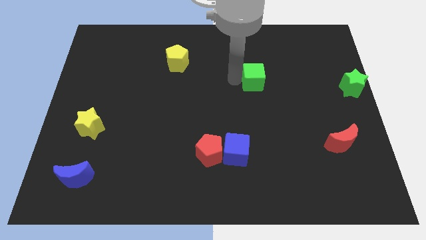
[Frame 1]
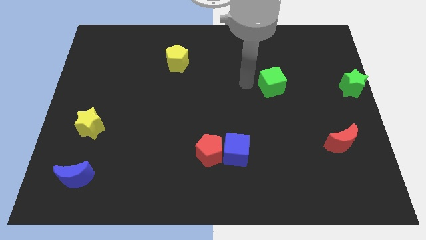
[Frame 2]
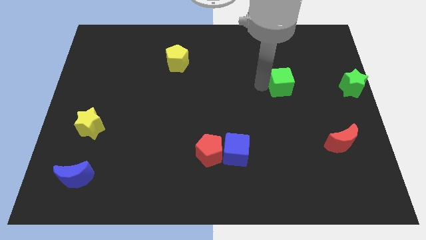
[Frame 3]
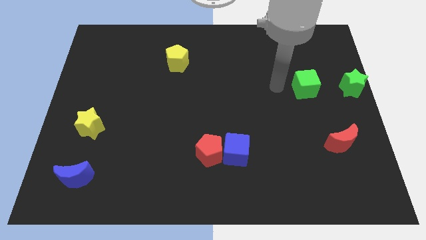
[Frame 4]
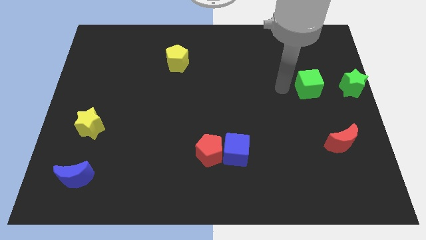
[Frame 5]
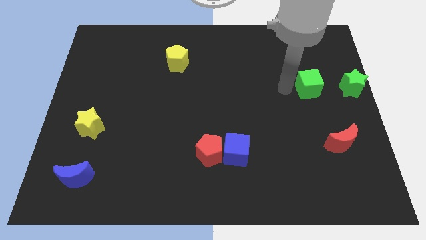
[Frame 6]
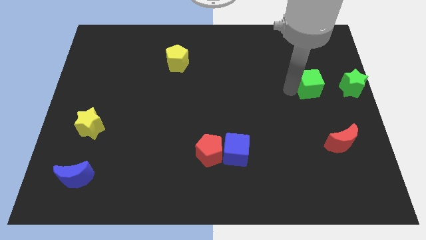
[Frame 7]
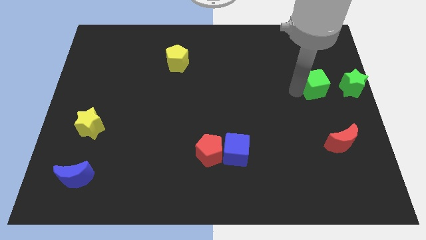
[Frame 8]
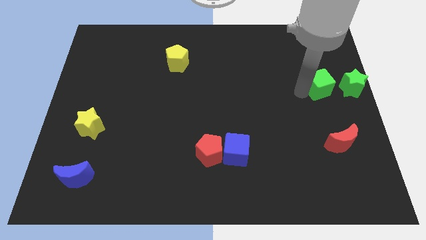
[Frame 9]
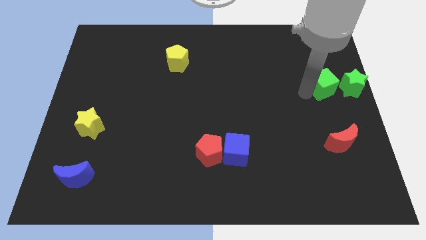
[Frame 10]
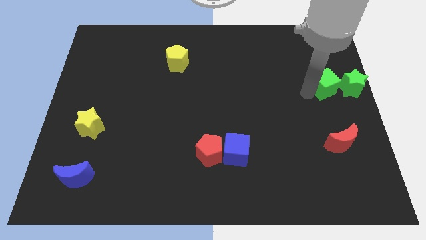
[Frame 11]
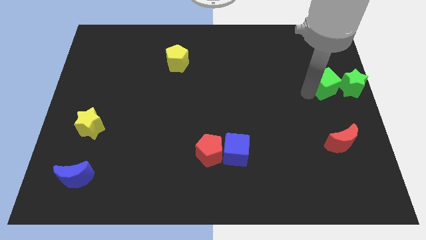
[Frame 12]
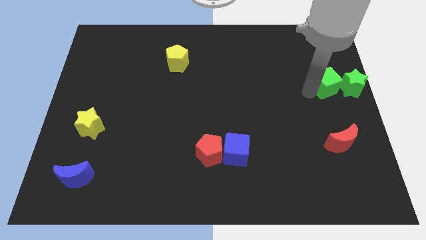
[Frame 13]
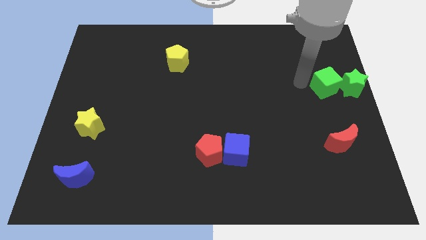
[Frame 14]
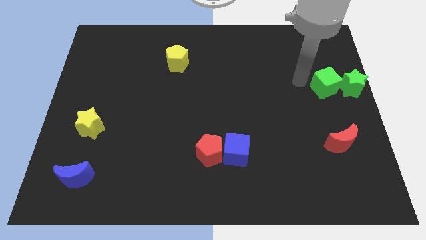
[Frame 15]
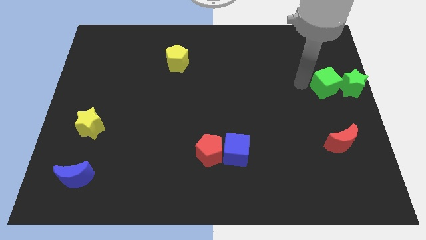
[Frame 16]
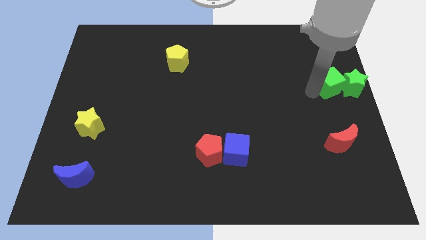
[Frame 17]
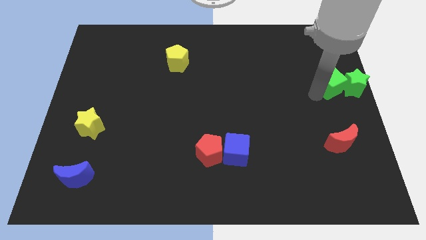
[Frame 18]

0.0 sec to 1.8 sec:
move the green cube to the left side of the green star

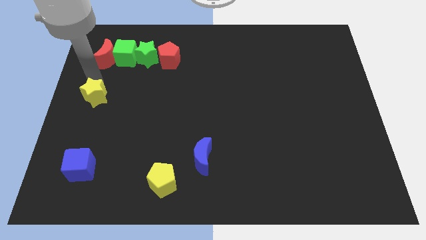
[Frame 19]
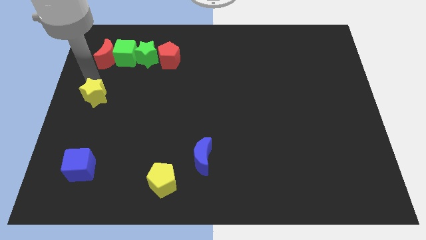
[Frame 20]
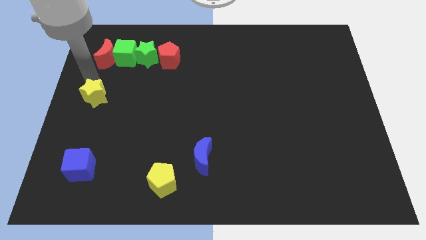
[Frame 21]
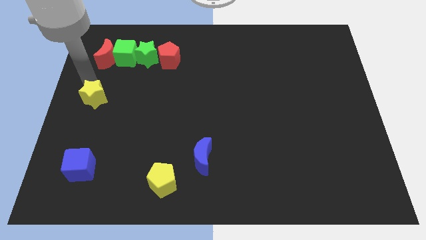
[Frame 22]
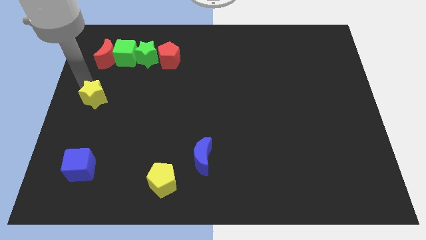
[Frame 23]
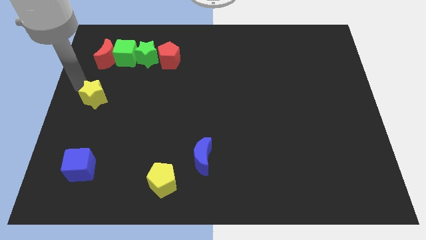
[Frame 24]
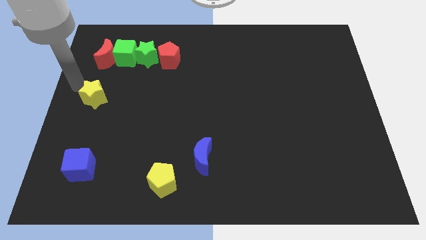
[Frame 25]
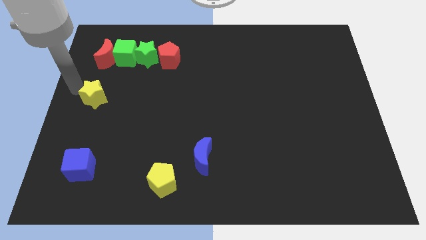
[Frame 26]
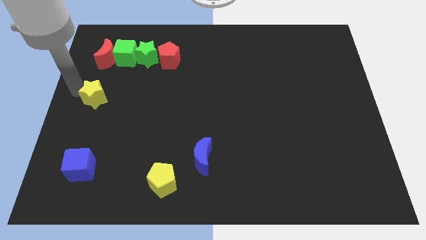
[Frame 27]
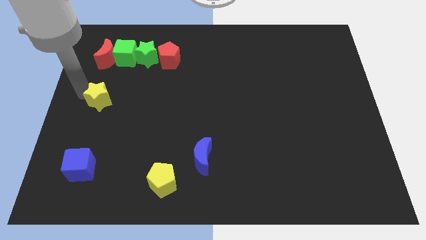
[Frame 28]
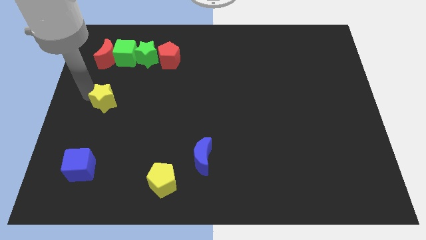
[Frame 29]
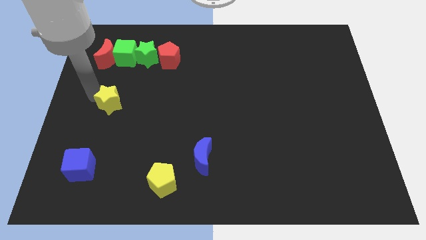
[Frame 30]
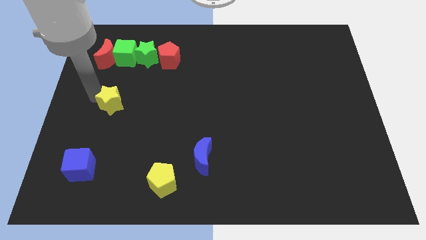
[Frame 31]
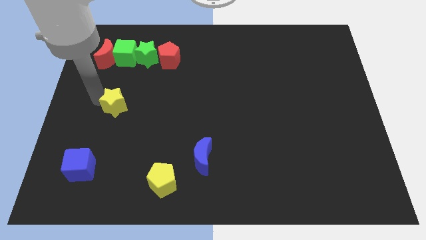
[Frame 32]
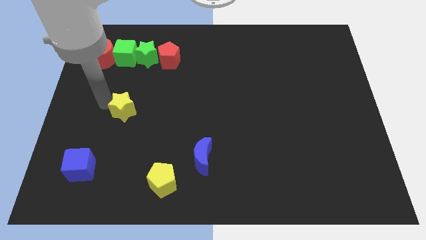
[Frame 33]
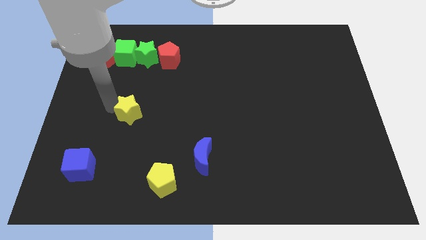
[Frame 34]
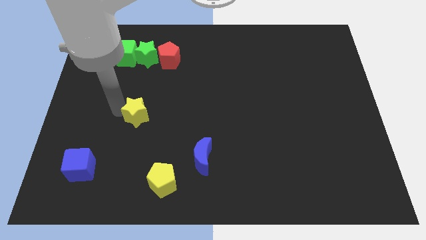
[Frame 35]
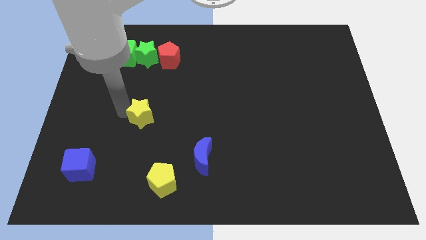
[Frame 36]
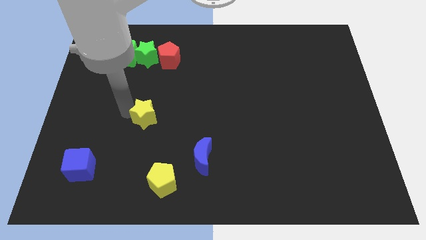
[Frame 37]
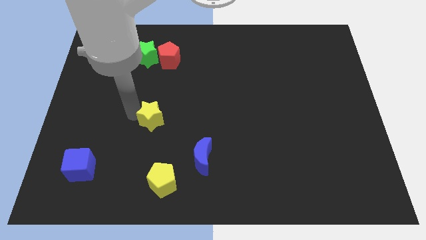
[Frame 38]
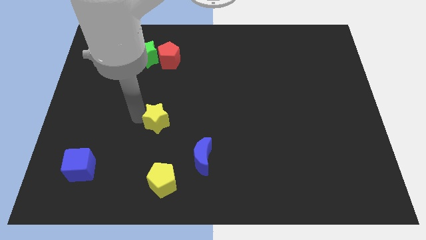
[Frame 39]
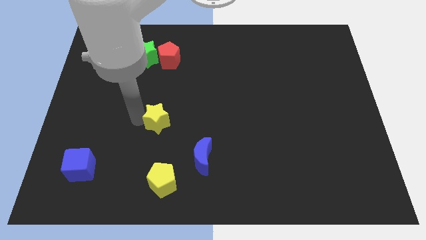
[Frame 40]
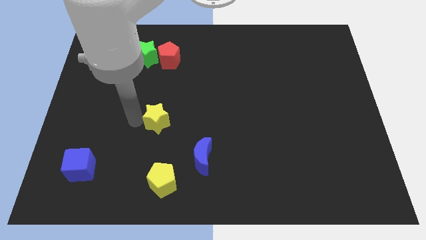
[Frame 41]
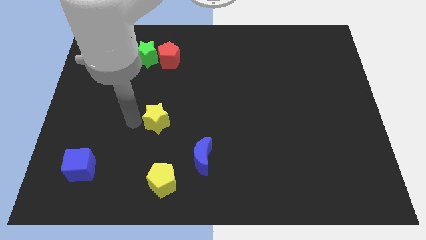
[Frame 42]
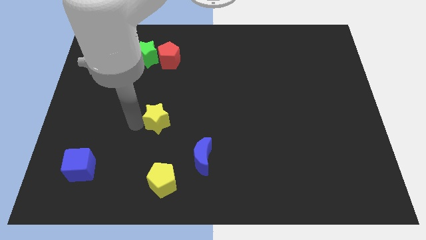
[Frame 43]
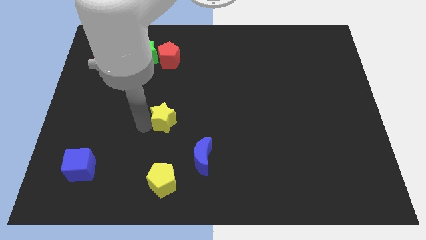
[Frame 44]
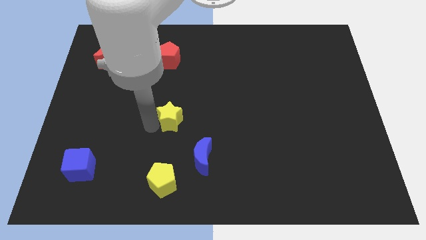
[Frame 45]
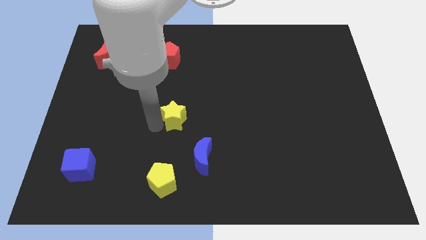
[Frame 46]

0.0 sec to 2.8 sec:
move the yellow star to the top of the yellow pentagon

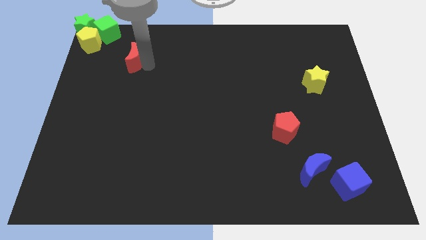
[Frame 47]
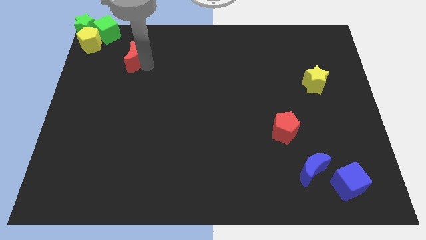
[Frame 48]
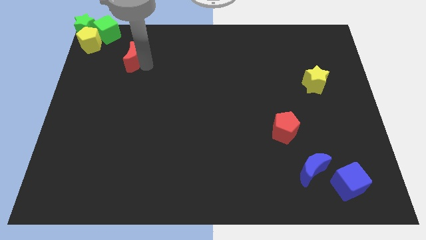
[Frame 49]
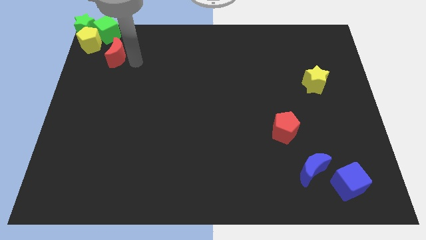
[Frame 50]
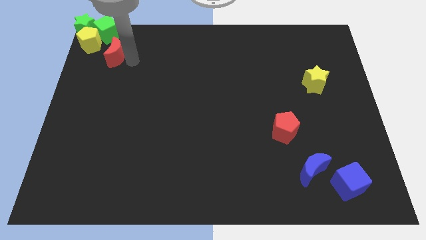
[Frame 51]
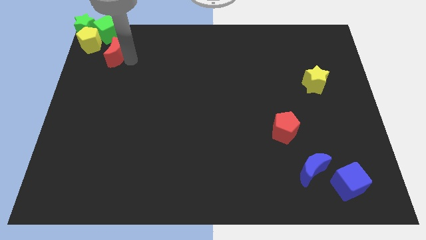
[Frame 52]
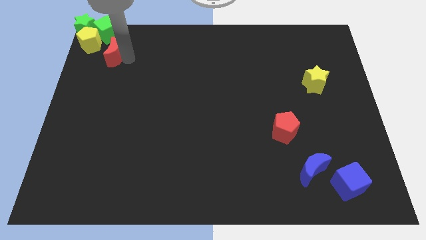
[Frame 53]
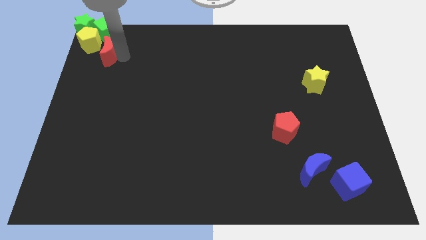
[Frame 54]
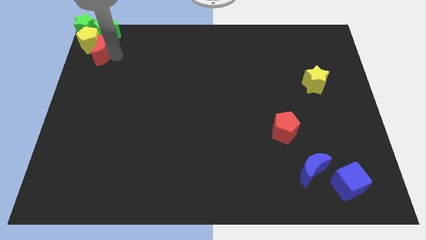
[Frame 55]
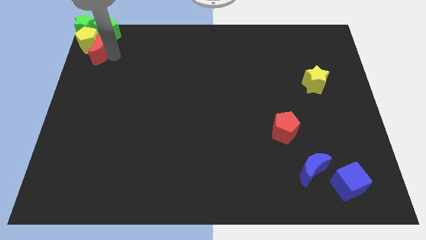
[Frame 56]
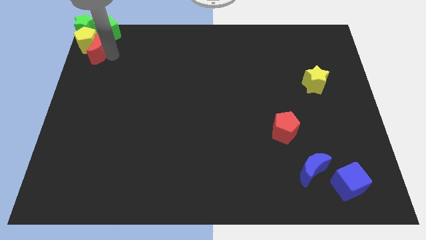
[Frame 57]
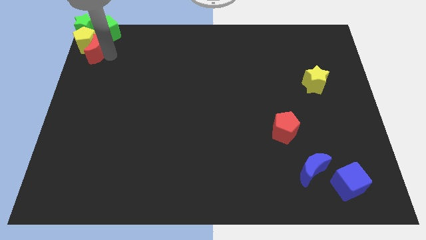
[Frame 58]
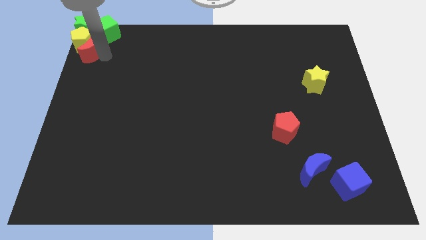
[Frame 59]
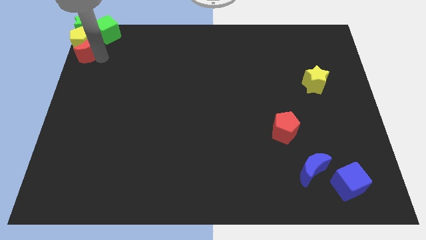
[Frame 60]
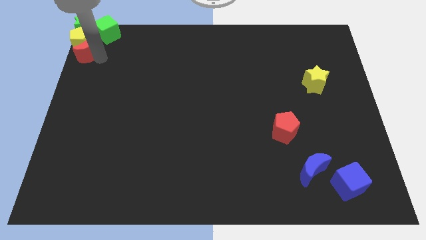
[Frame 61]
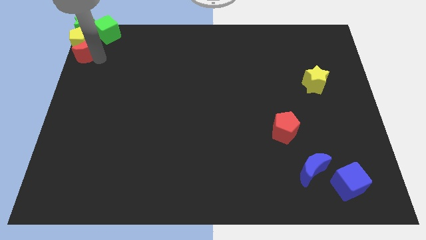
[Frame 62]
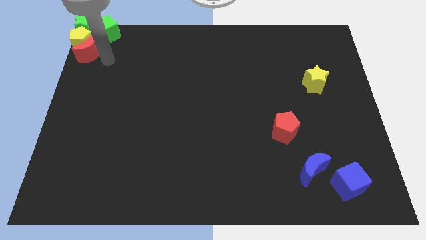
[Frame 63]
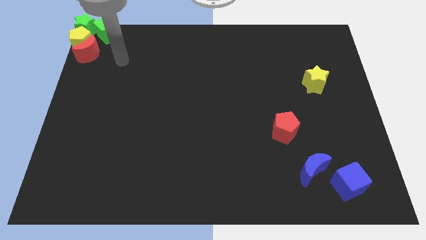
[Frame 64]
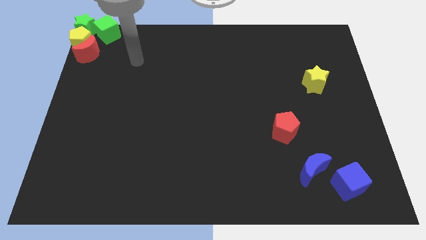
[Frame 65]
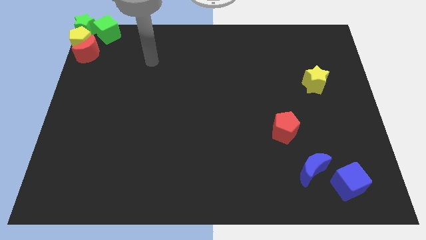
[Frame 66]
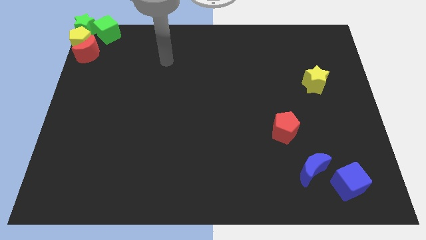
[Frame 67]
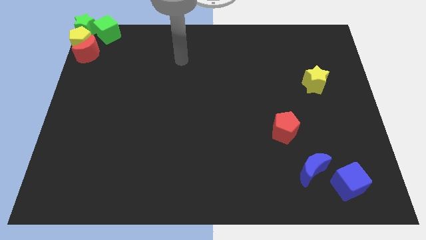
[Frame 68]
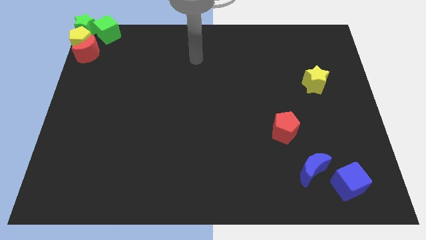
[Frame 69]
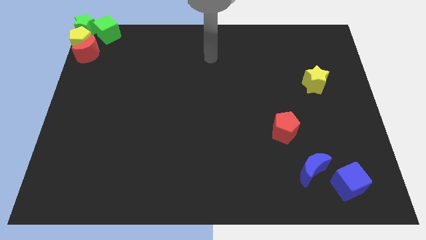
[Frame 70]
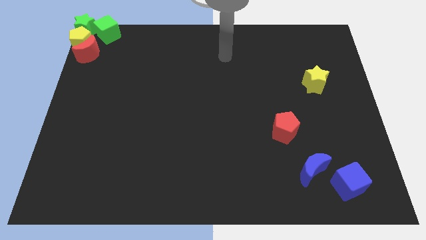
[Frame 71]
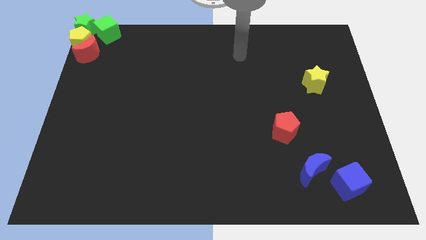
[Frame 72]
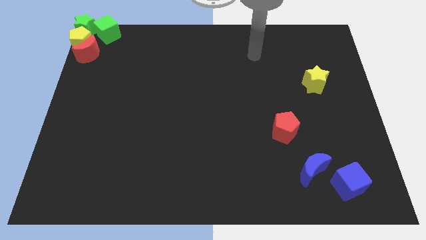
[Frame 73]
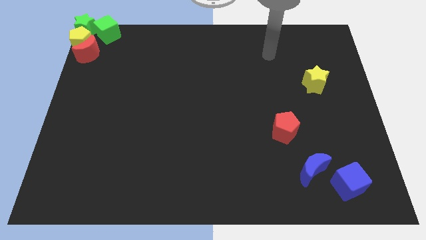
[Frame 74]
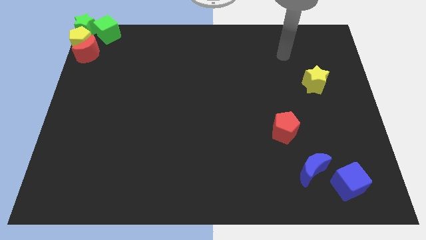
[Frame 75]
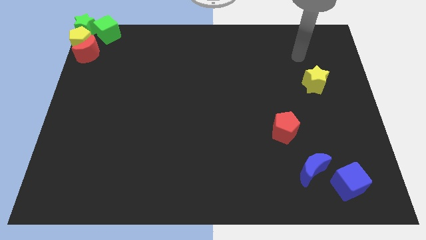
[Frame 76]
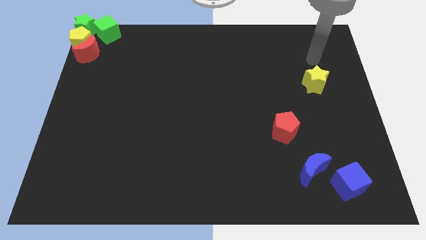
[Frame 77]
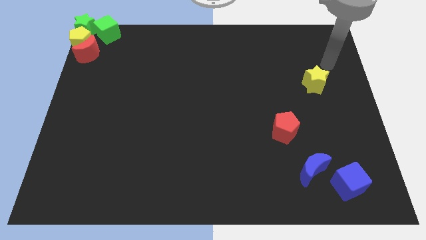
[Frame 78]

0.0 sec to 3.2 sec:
slide the red moon into the yellow pentagon

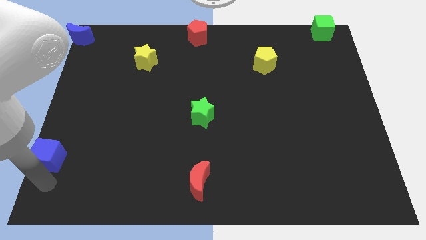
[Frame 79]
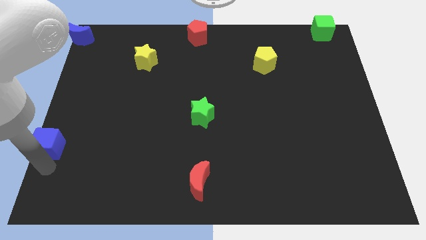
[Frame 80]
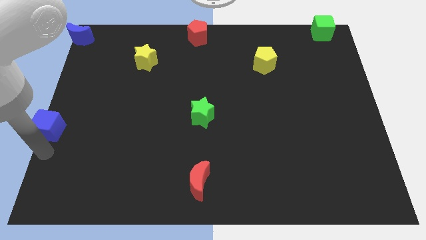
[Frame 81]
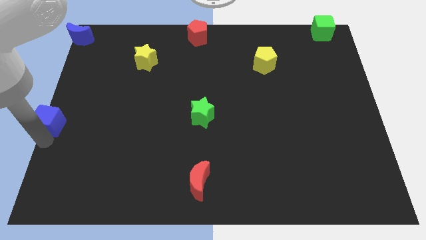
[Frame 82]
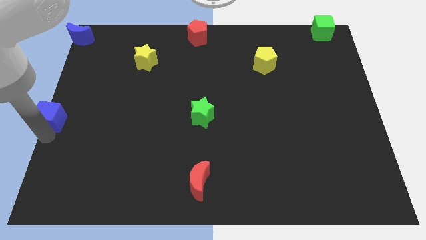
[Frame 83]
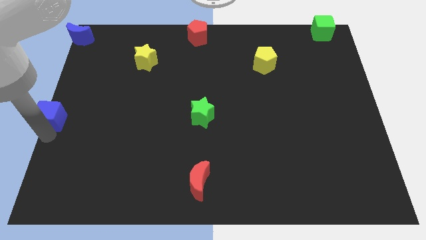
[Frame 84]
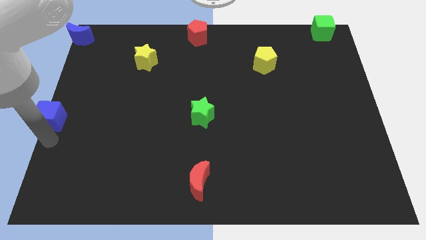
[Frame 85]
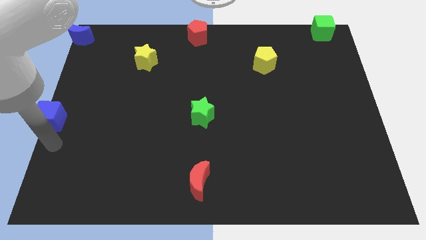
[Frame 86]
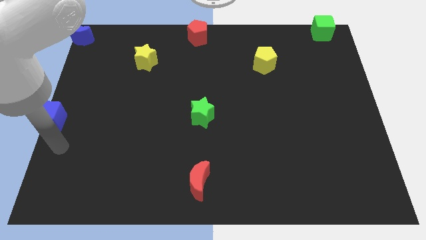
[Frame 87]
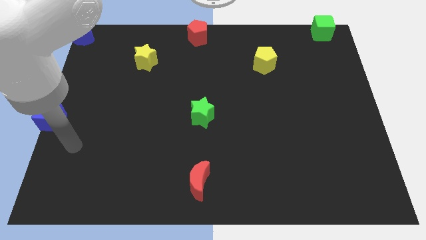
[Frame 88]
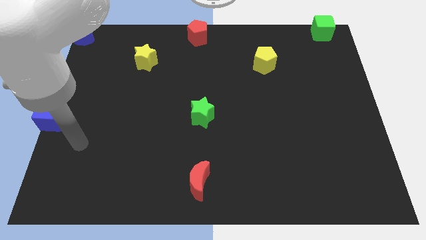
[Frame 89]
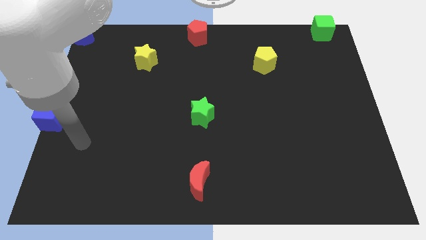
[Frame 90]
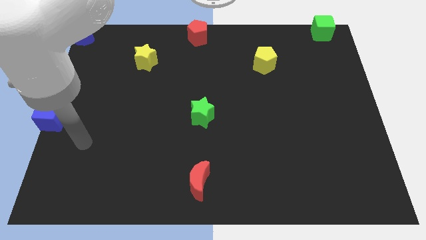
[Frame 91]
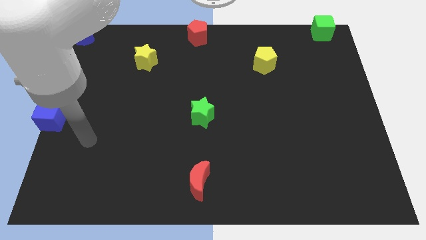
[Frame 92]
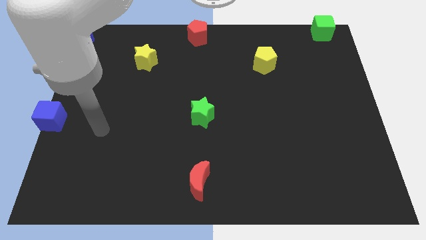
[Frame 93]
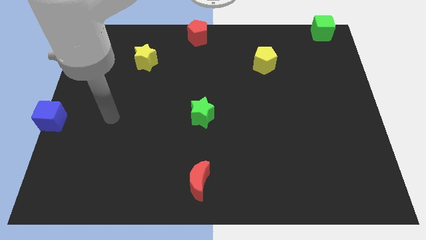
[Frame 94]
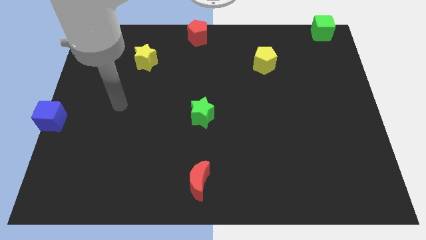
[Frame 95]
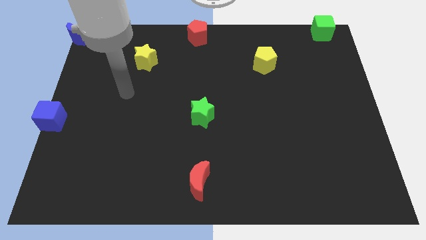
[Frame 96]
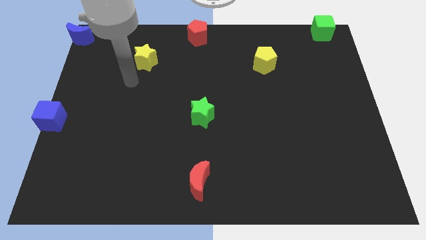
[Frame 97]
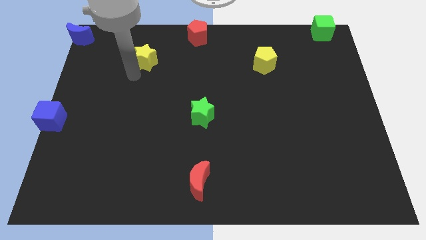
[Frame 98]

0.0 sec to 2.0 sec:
place the blue cube to the left center
